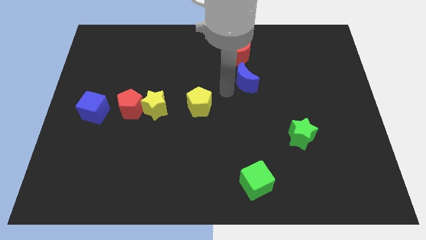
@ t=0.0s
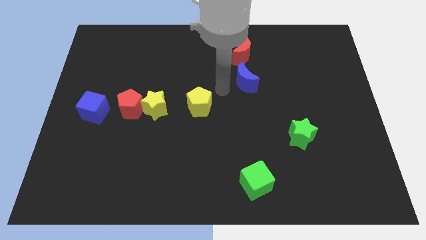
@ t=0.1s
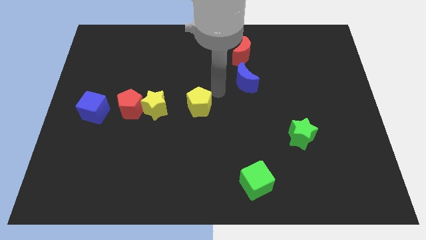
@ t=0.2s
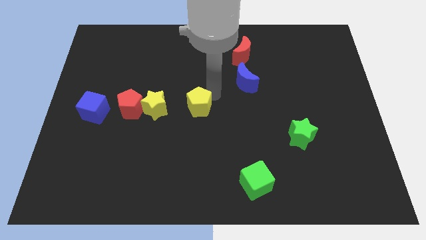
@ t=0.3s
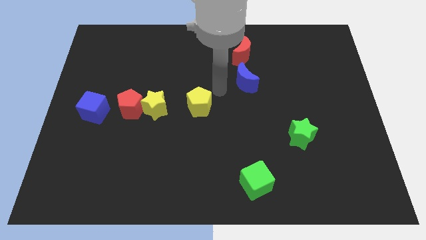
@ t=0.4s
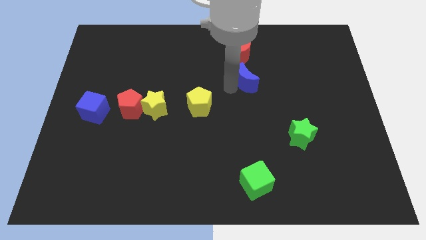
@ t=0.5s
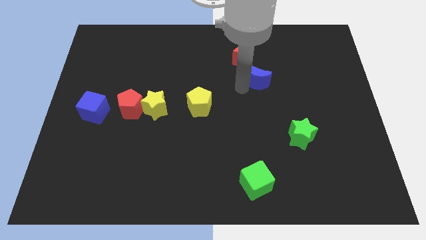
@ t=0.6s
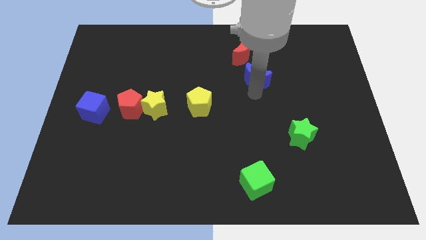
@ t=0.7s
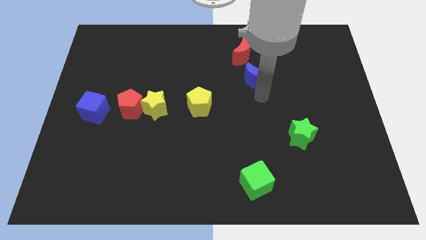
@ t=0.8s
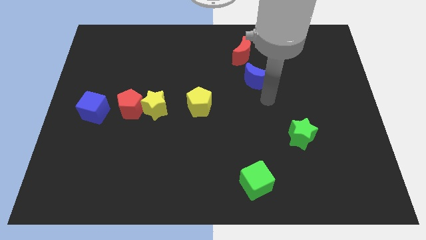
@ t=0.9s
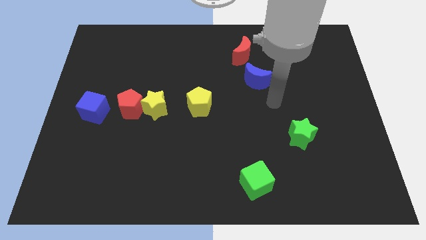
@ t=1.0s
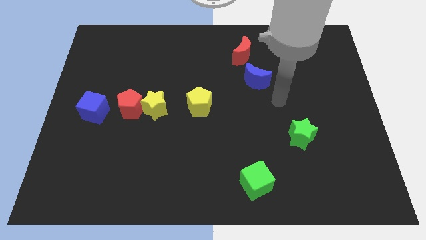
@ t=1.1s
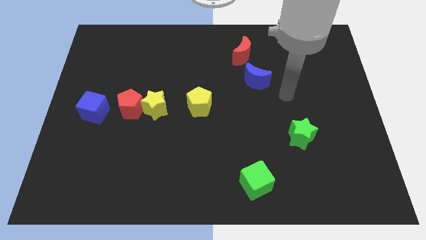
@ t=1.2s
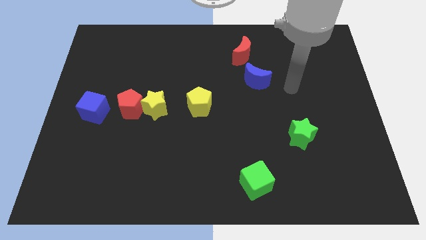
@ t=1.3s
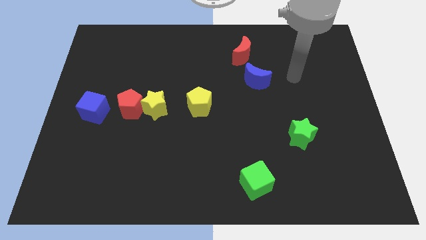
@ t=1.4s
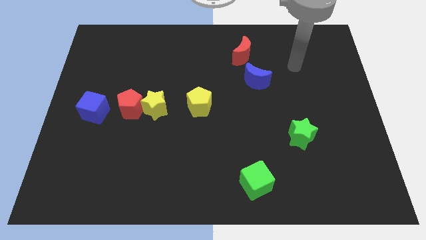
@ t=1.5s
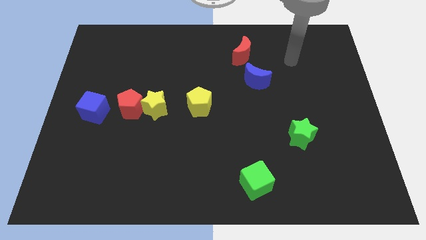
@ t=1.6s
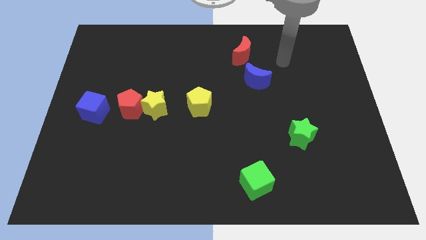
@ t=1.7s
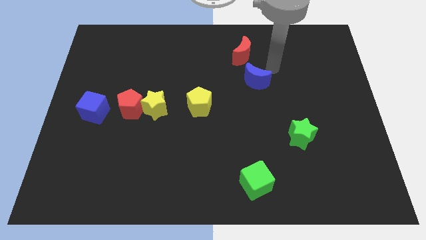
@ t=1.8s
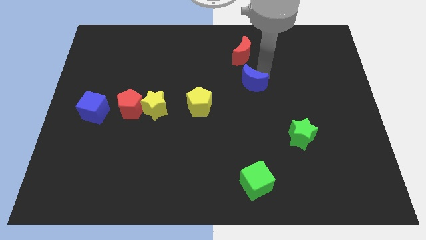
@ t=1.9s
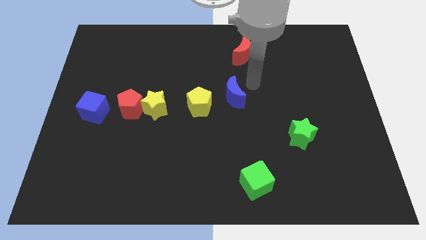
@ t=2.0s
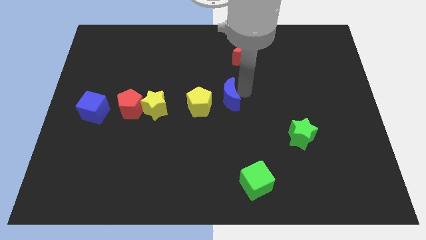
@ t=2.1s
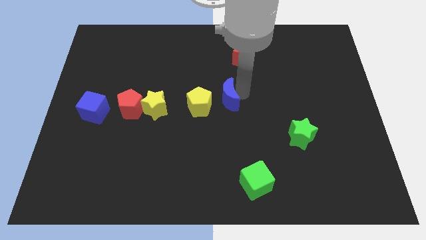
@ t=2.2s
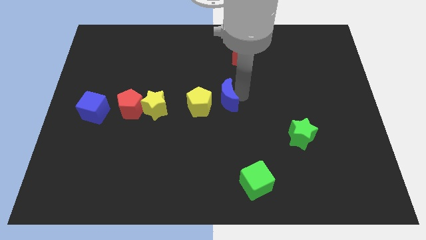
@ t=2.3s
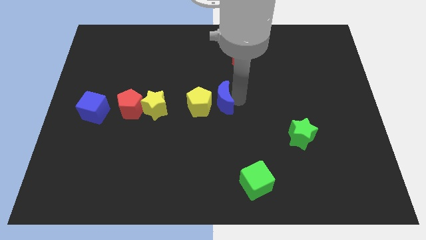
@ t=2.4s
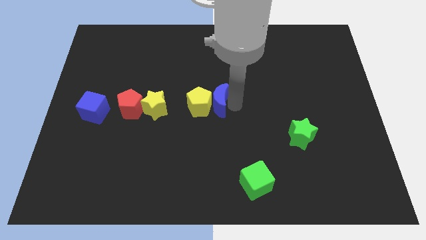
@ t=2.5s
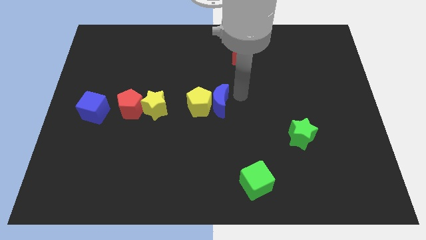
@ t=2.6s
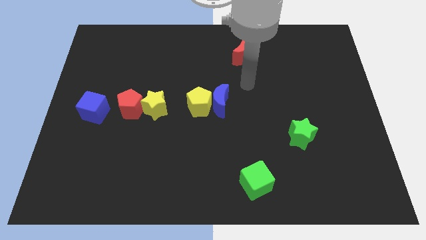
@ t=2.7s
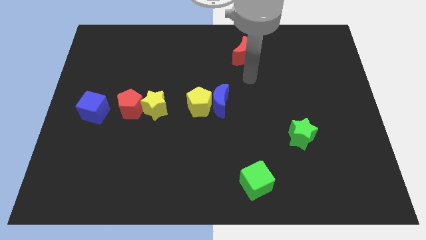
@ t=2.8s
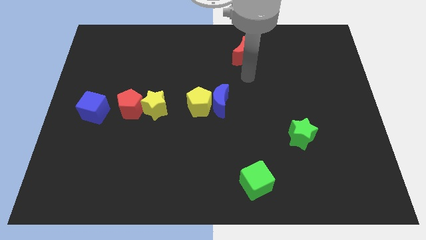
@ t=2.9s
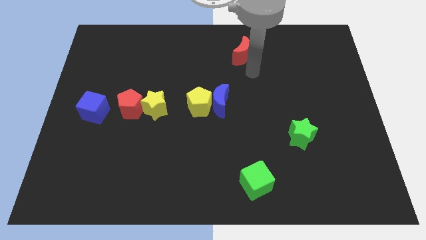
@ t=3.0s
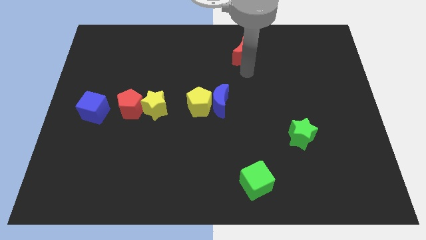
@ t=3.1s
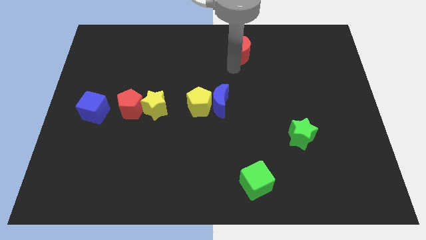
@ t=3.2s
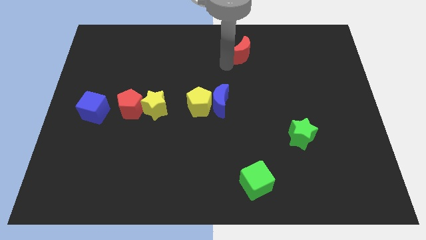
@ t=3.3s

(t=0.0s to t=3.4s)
place the blue moon close to the yellow pentagon

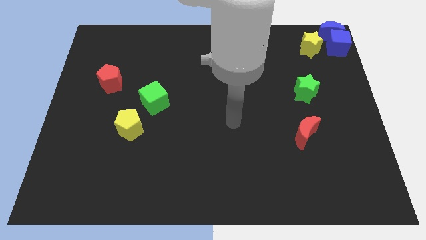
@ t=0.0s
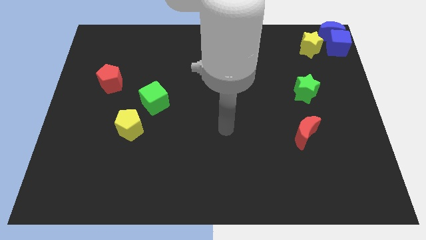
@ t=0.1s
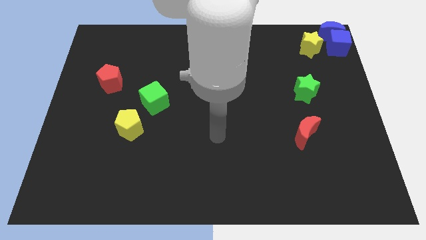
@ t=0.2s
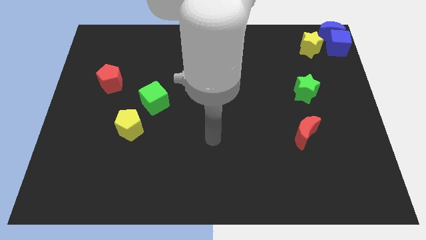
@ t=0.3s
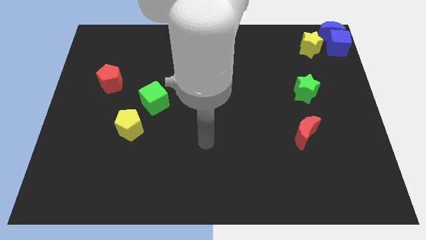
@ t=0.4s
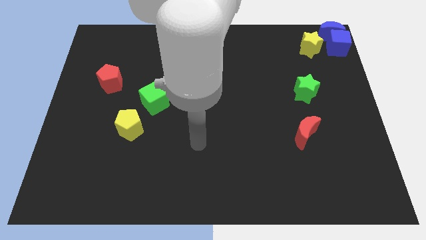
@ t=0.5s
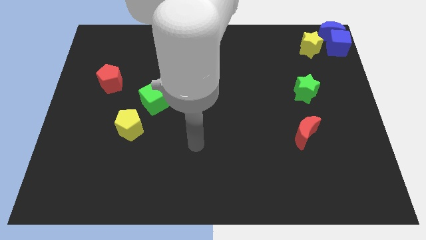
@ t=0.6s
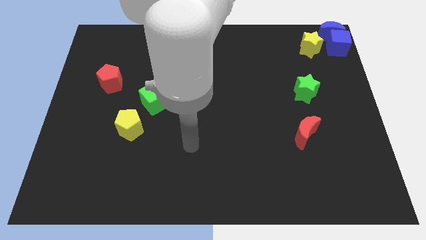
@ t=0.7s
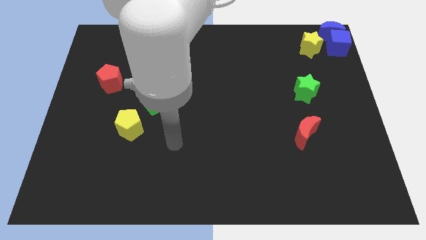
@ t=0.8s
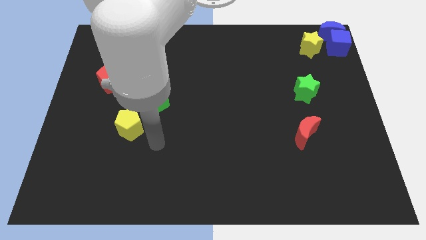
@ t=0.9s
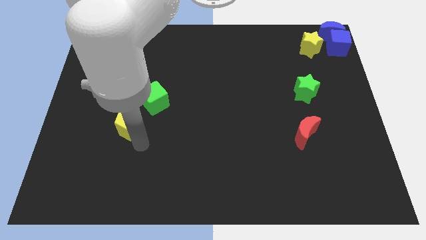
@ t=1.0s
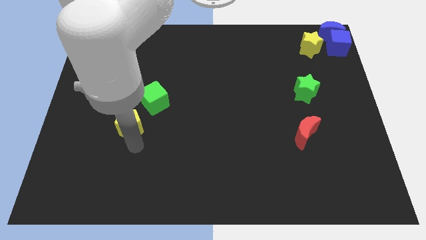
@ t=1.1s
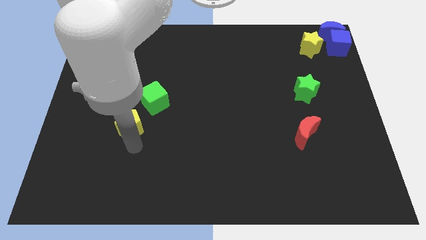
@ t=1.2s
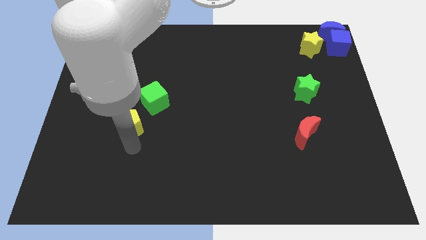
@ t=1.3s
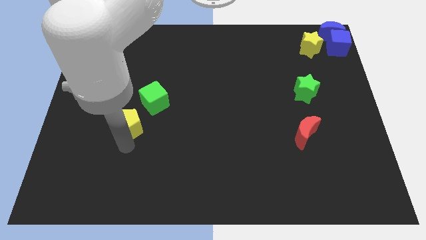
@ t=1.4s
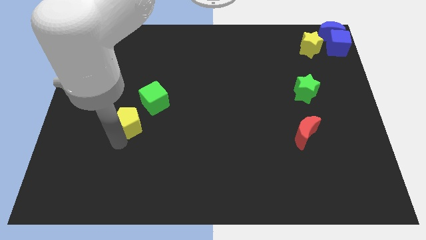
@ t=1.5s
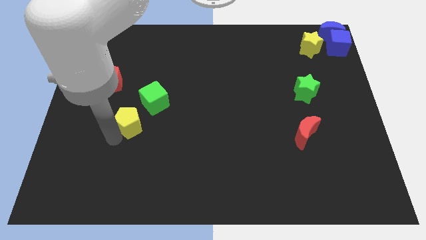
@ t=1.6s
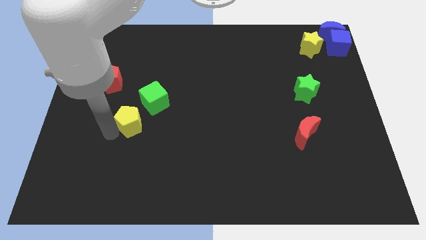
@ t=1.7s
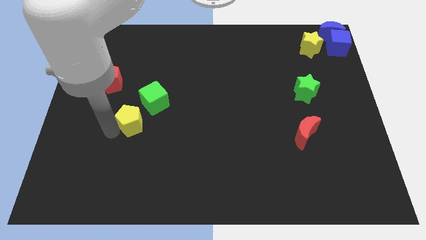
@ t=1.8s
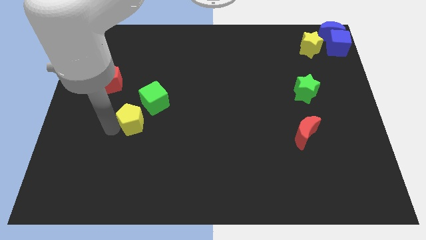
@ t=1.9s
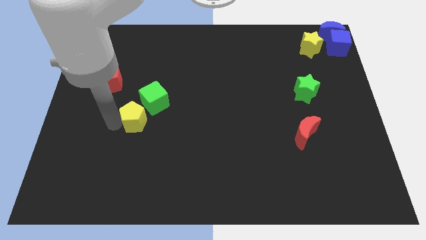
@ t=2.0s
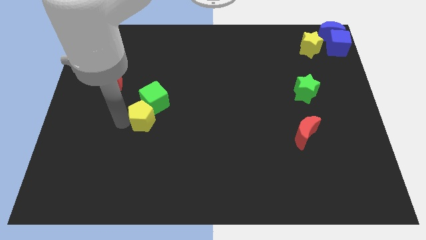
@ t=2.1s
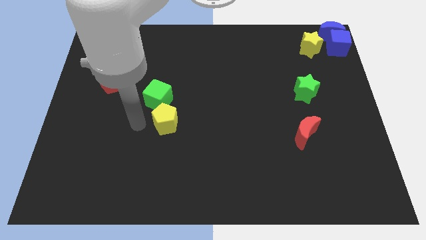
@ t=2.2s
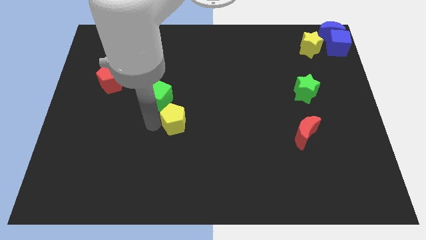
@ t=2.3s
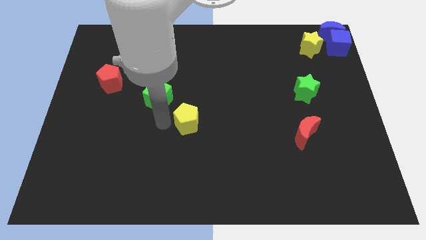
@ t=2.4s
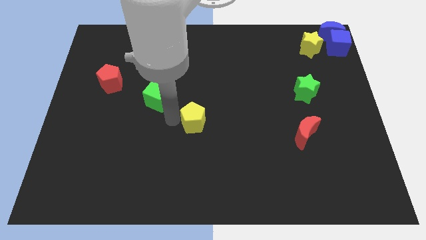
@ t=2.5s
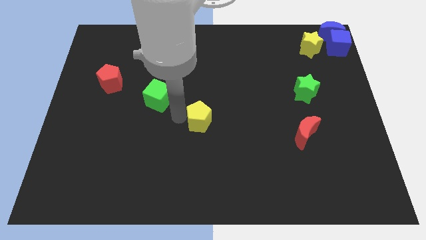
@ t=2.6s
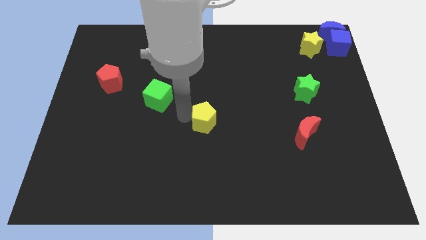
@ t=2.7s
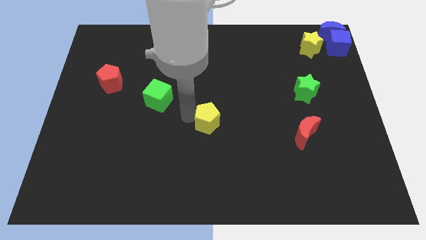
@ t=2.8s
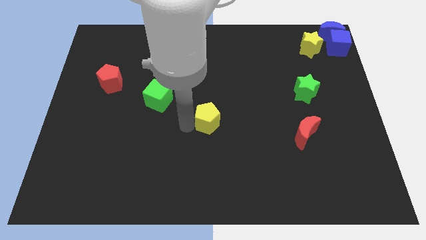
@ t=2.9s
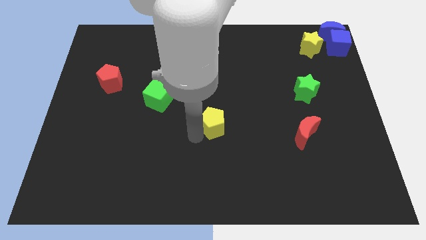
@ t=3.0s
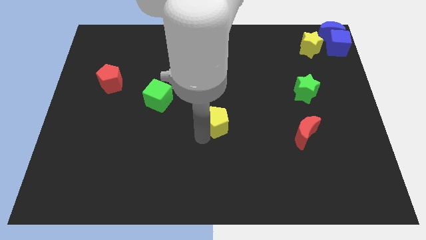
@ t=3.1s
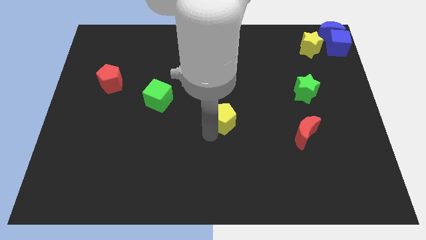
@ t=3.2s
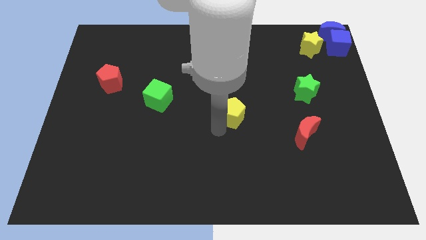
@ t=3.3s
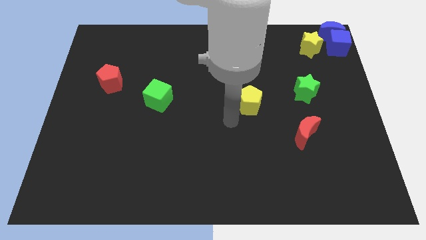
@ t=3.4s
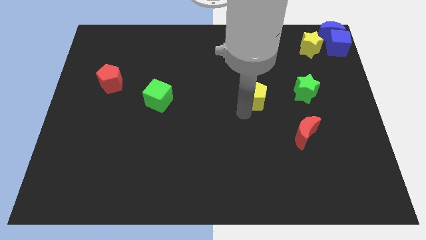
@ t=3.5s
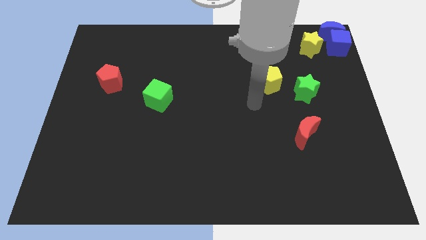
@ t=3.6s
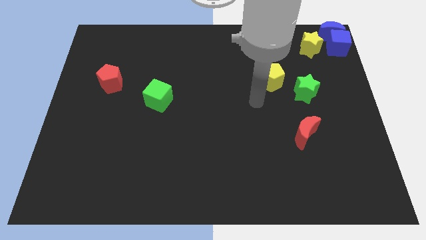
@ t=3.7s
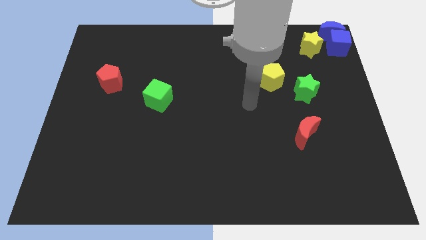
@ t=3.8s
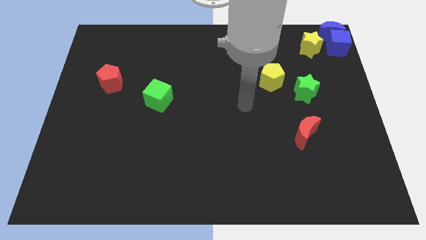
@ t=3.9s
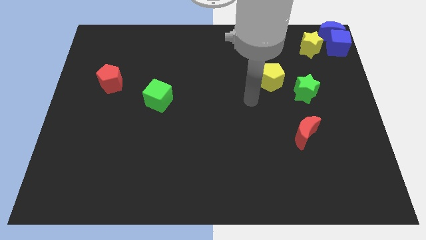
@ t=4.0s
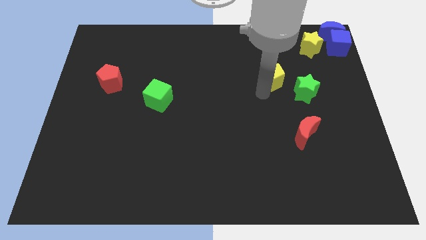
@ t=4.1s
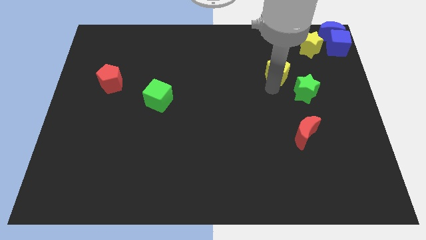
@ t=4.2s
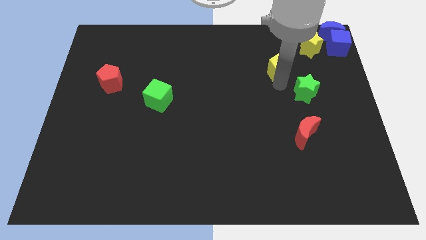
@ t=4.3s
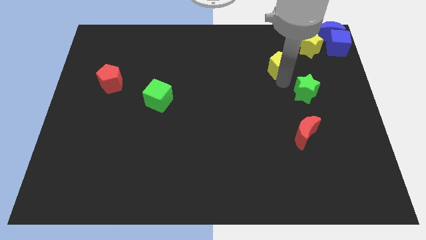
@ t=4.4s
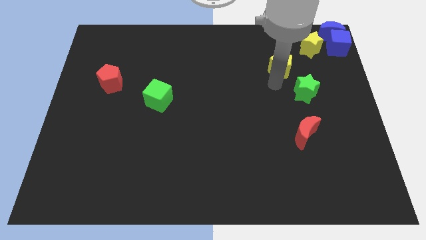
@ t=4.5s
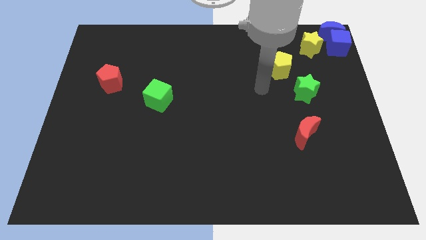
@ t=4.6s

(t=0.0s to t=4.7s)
place the yellow block towards the top left of the green star

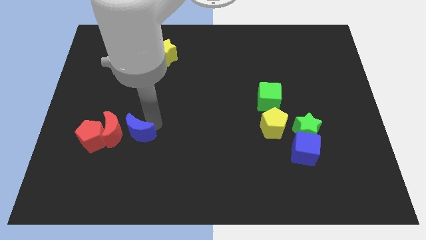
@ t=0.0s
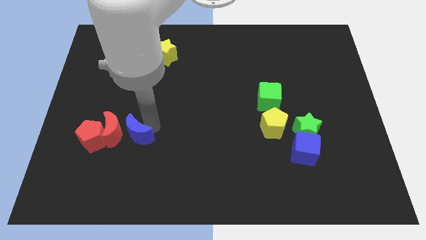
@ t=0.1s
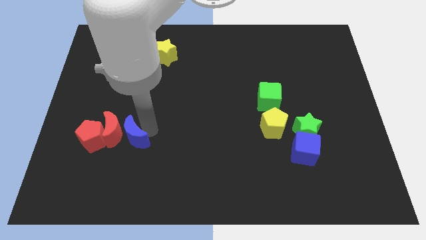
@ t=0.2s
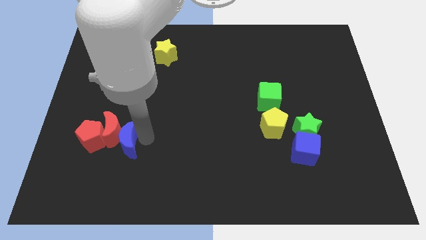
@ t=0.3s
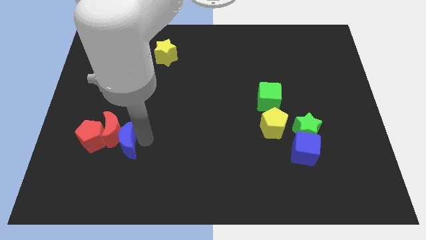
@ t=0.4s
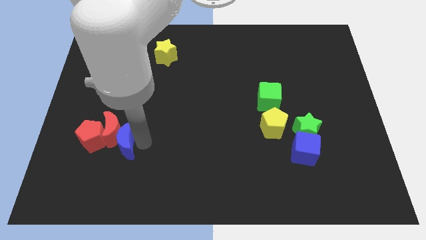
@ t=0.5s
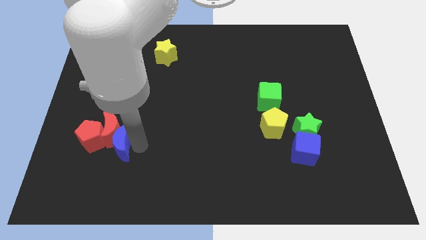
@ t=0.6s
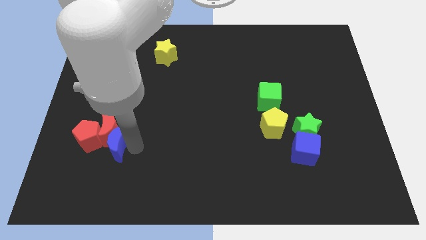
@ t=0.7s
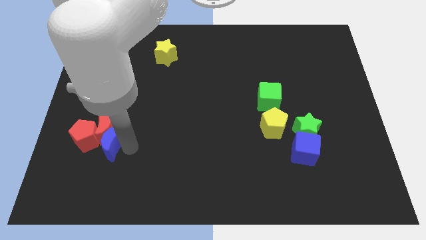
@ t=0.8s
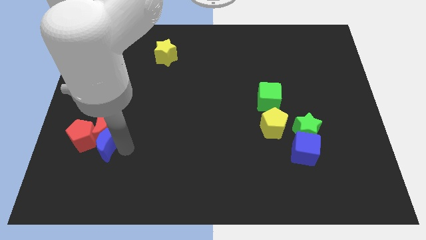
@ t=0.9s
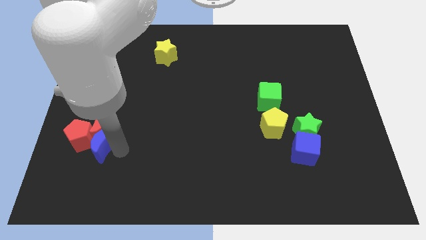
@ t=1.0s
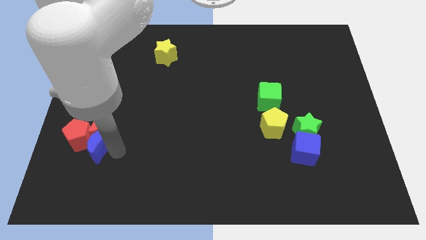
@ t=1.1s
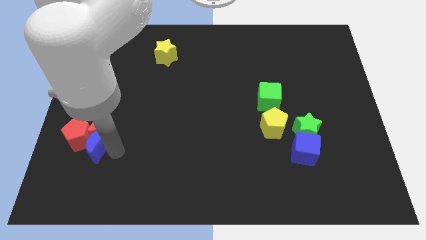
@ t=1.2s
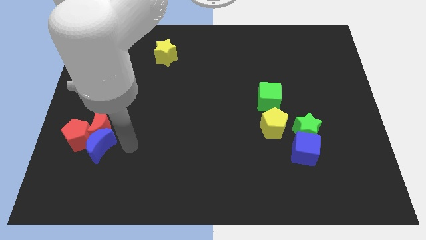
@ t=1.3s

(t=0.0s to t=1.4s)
move the blue crescent to the bottom of the red crescent
